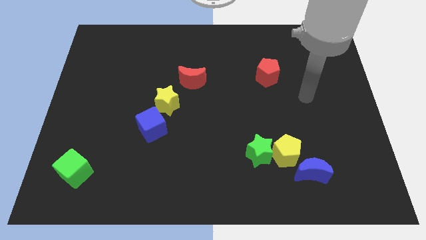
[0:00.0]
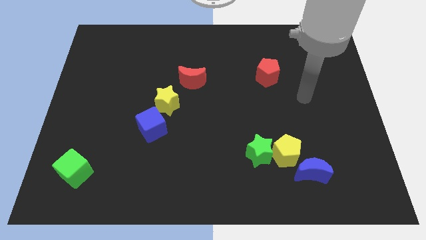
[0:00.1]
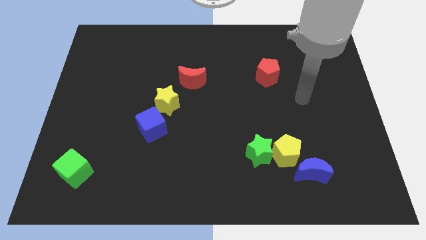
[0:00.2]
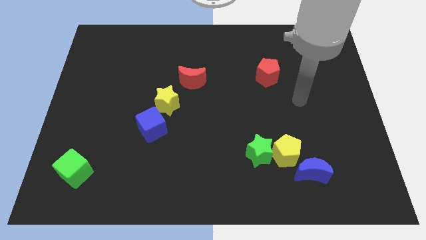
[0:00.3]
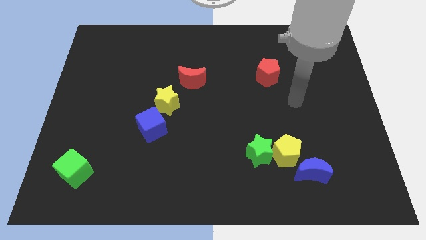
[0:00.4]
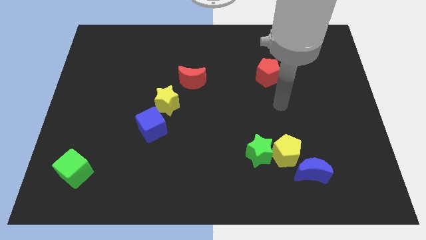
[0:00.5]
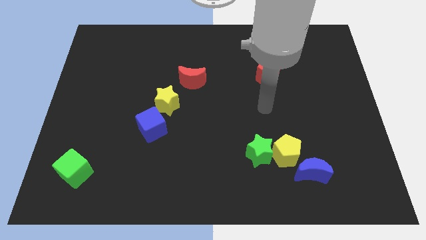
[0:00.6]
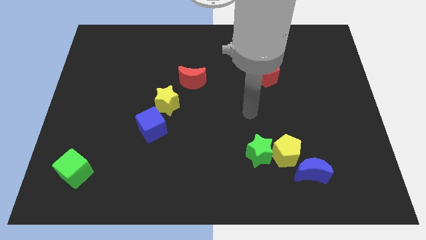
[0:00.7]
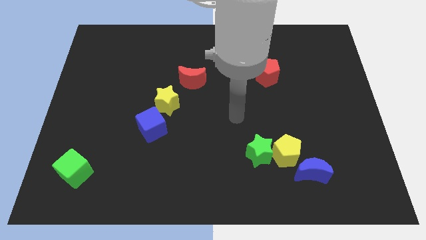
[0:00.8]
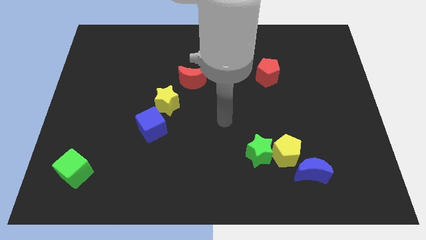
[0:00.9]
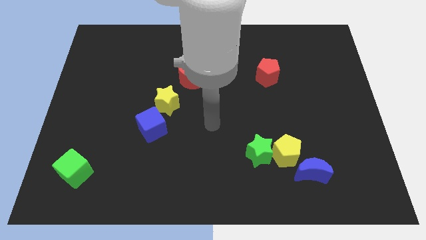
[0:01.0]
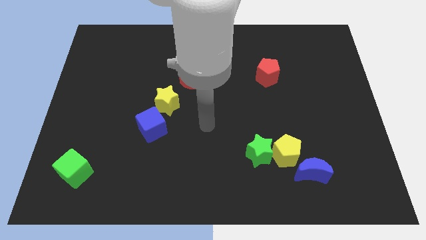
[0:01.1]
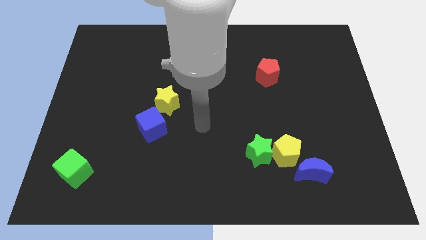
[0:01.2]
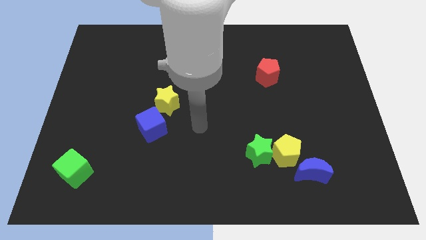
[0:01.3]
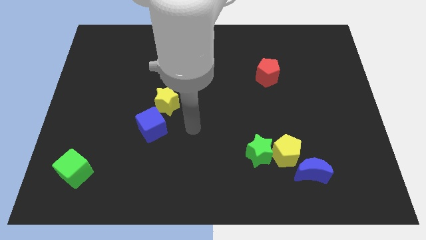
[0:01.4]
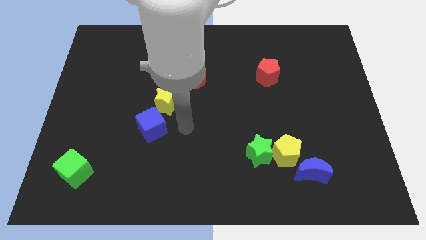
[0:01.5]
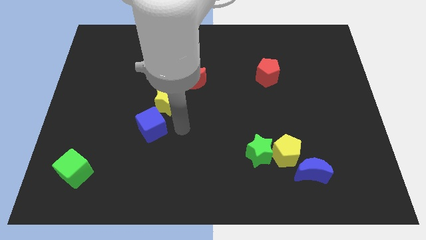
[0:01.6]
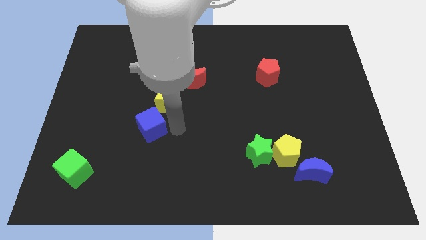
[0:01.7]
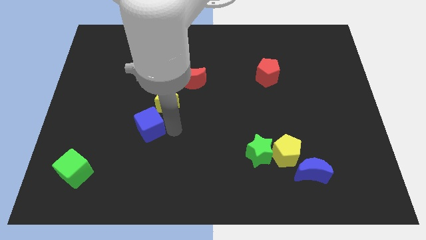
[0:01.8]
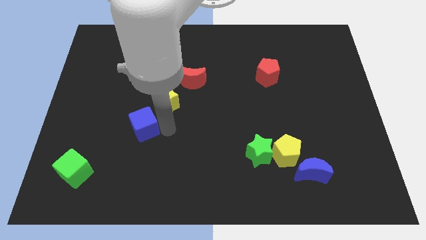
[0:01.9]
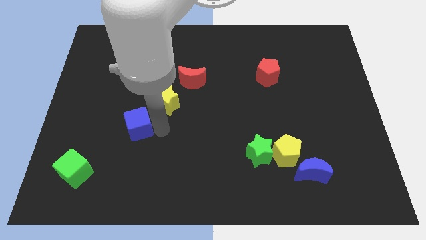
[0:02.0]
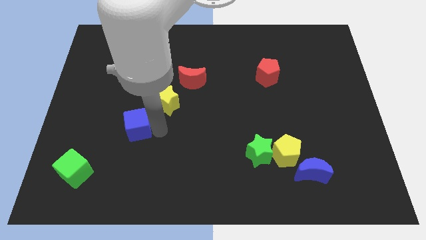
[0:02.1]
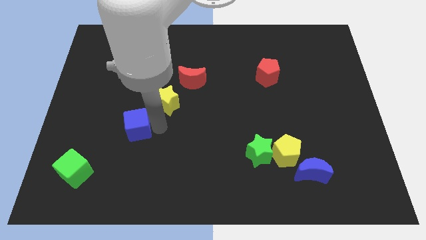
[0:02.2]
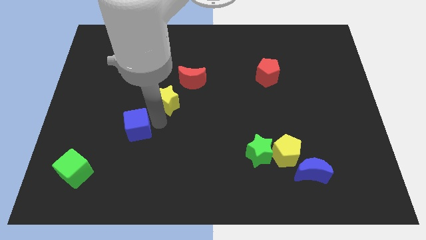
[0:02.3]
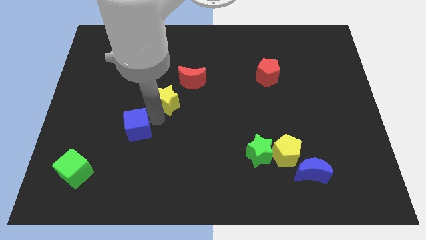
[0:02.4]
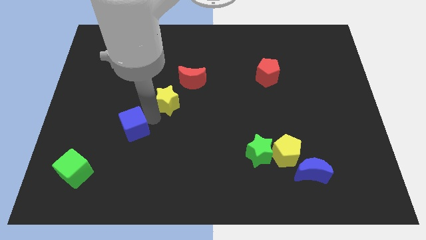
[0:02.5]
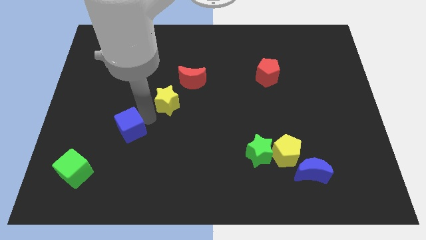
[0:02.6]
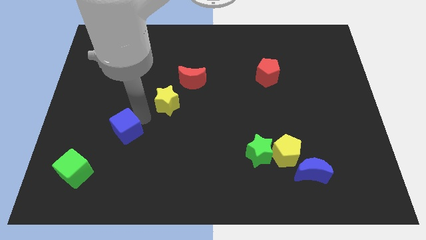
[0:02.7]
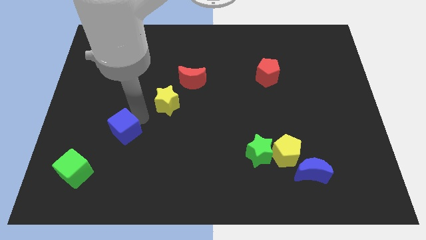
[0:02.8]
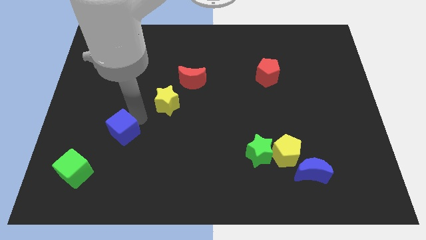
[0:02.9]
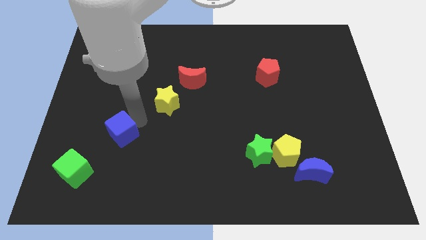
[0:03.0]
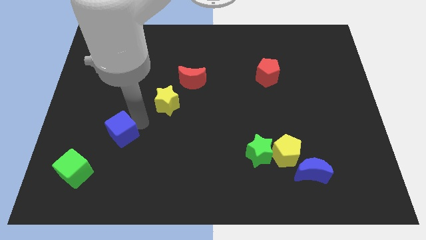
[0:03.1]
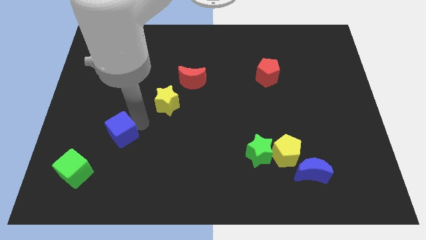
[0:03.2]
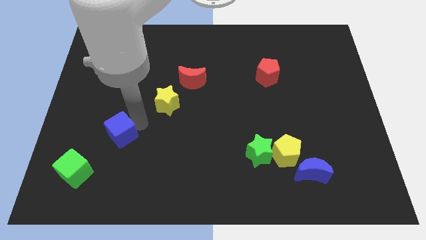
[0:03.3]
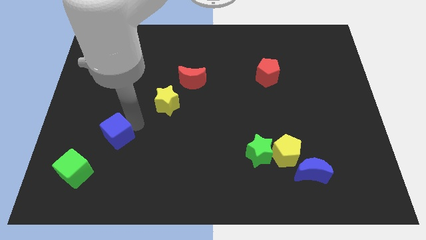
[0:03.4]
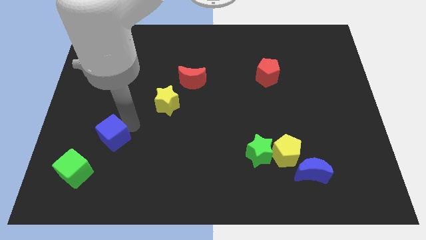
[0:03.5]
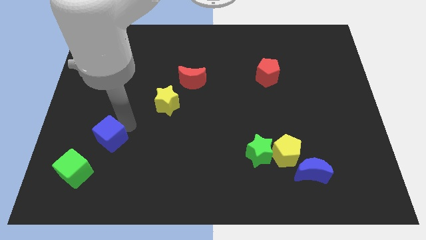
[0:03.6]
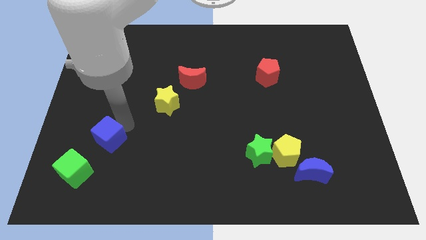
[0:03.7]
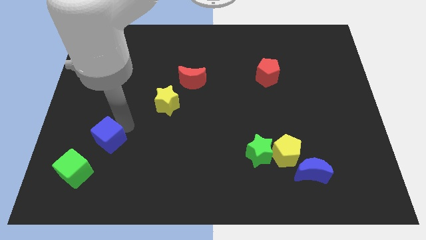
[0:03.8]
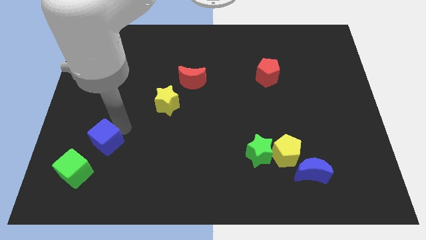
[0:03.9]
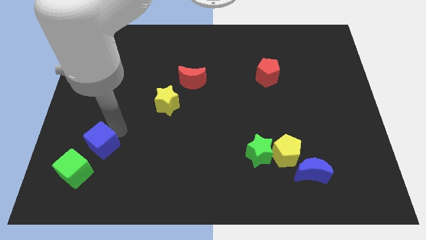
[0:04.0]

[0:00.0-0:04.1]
push the blue cube to the top right of the green cube

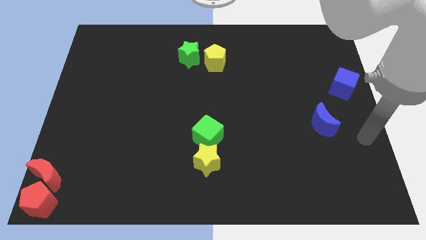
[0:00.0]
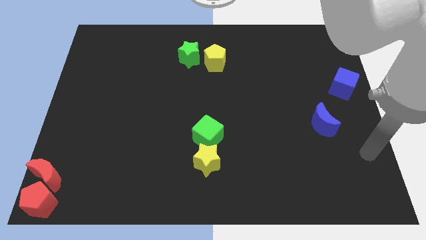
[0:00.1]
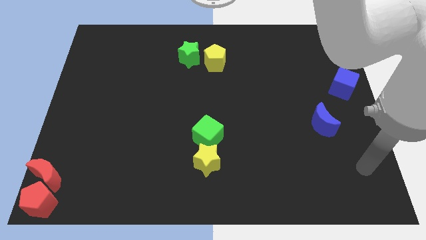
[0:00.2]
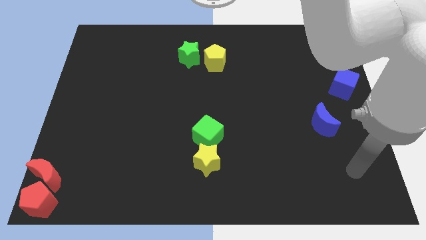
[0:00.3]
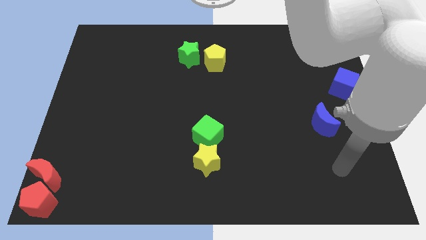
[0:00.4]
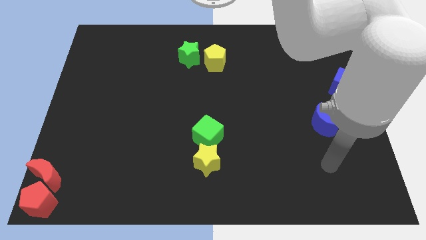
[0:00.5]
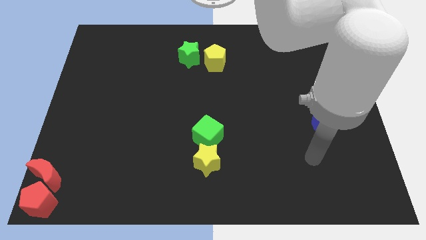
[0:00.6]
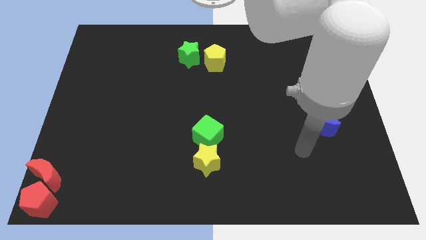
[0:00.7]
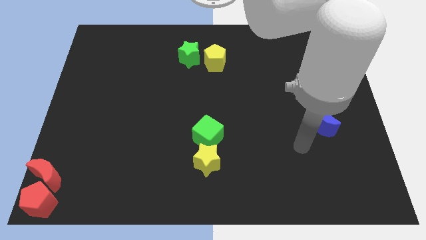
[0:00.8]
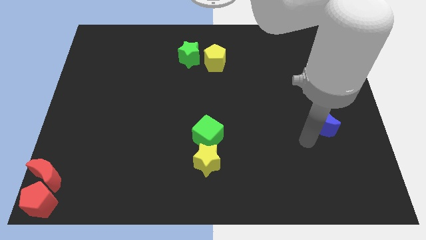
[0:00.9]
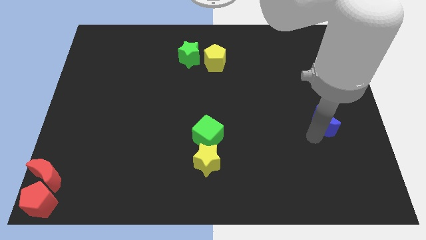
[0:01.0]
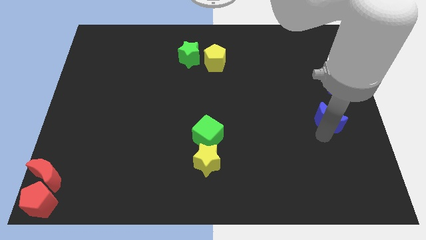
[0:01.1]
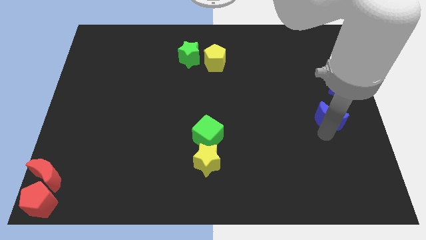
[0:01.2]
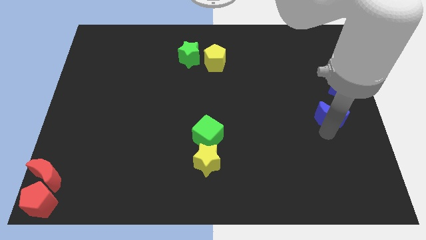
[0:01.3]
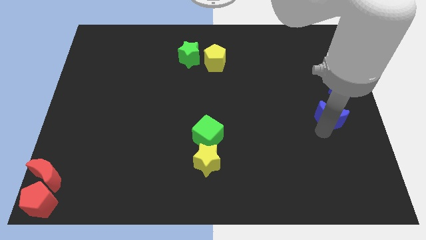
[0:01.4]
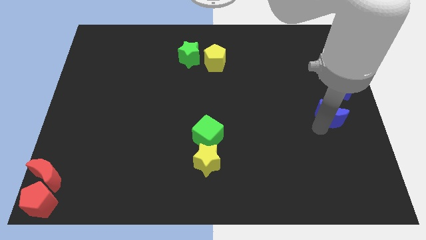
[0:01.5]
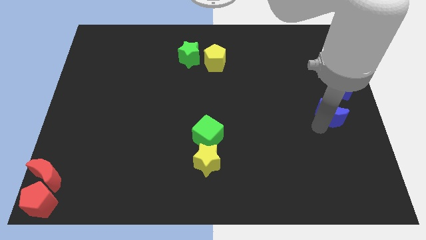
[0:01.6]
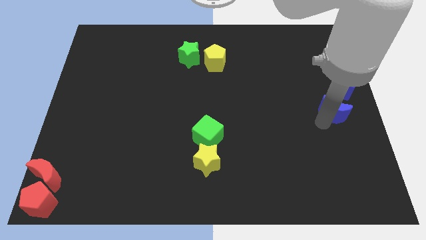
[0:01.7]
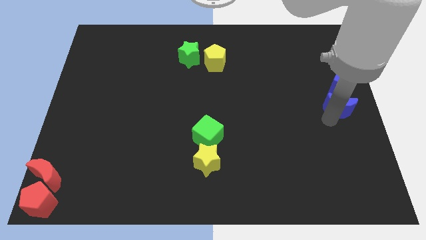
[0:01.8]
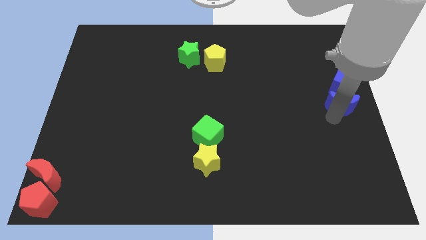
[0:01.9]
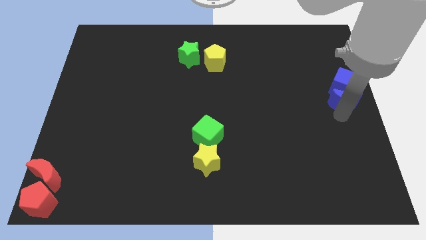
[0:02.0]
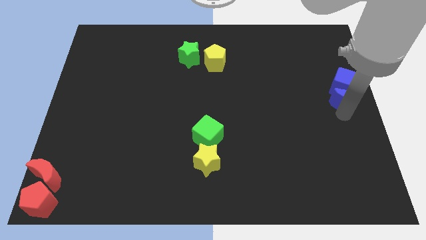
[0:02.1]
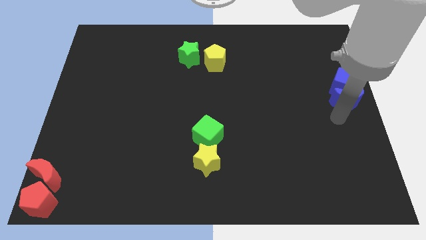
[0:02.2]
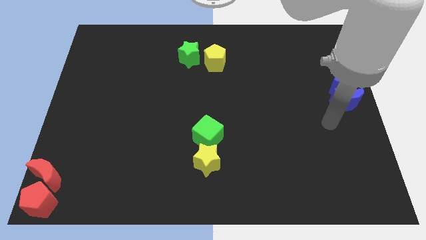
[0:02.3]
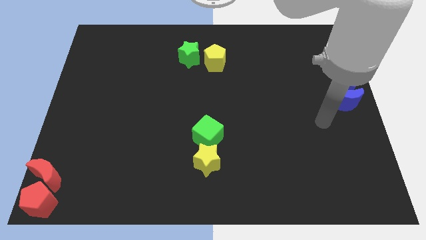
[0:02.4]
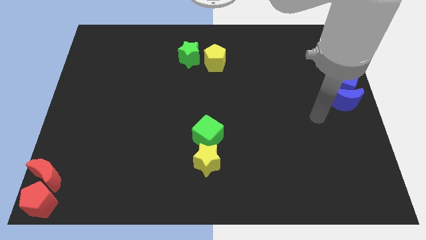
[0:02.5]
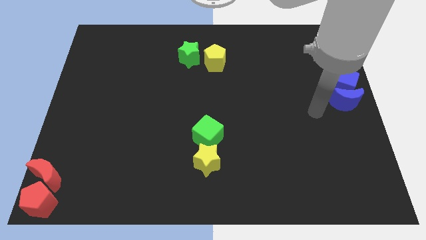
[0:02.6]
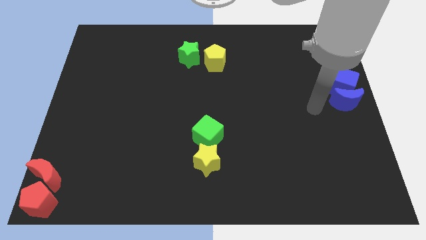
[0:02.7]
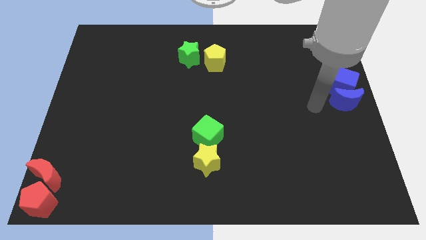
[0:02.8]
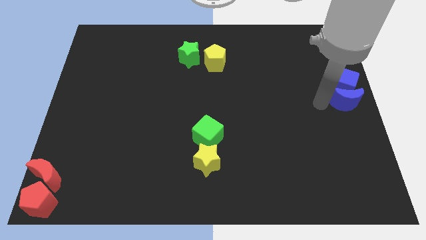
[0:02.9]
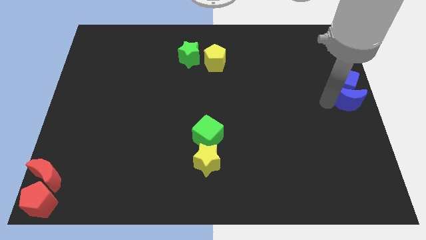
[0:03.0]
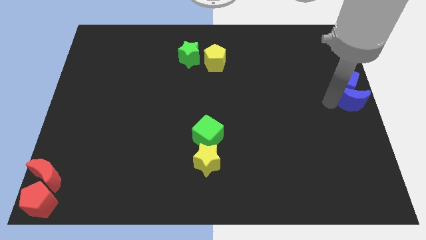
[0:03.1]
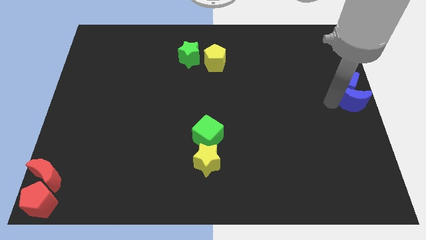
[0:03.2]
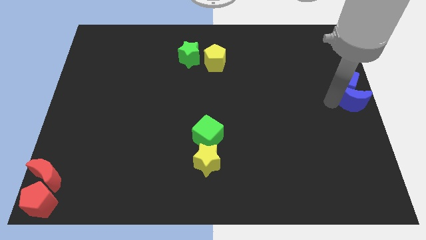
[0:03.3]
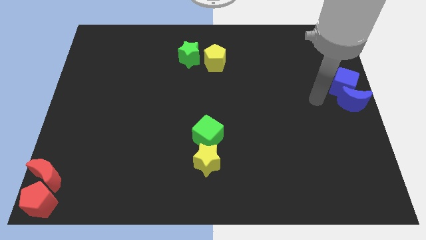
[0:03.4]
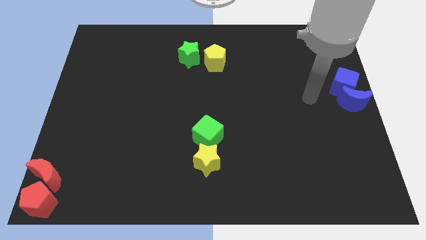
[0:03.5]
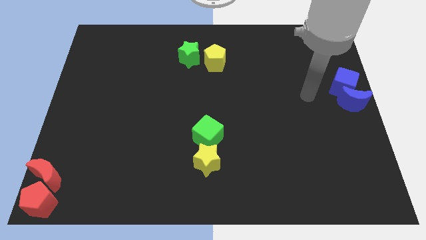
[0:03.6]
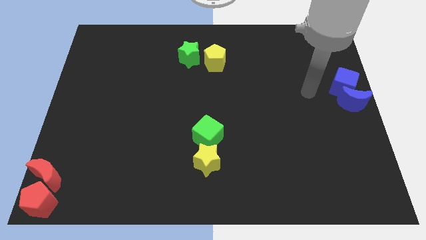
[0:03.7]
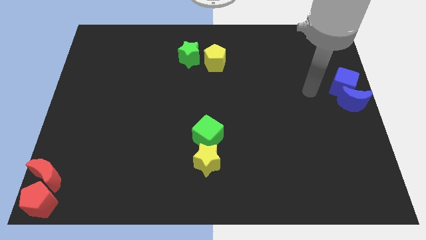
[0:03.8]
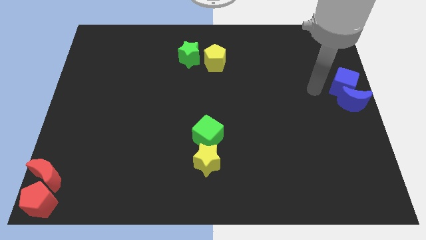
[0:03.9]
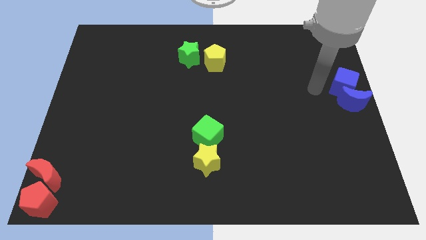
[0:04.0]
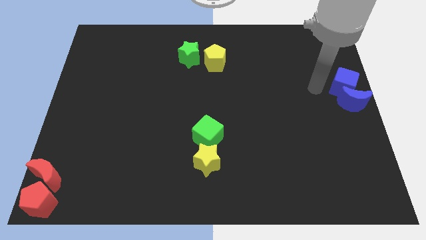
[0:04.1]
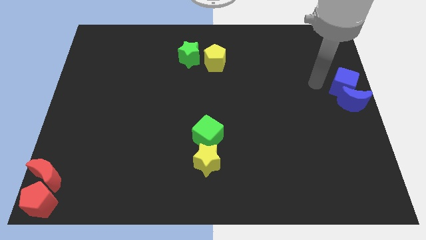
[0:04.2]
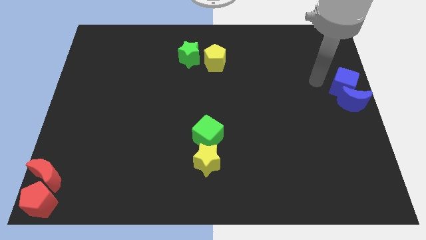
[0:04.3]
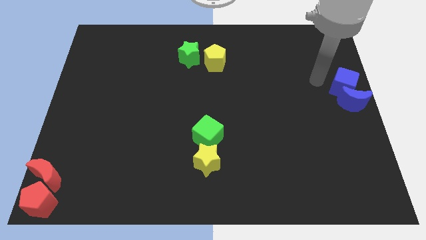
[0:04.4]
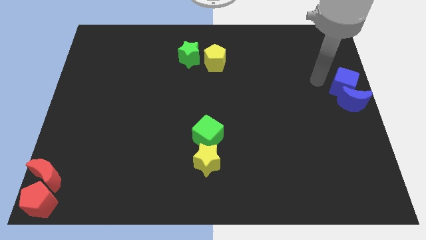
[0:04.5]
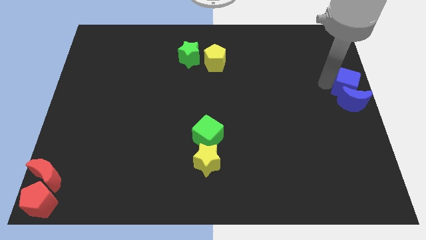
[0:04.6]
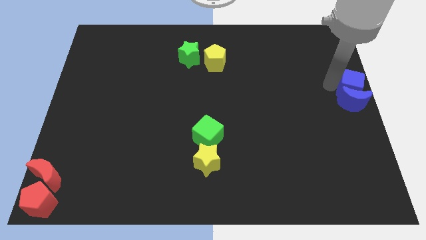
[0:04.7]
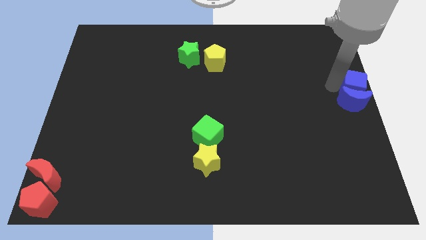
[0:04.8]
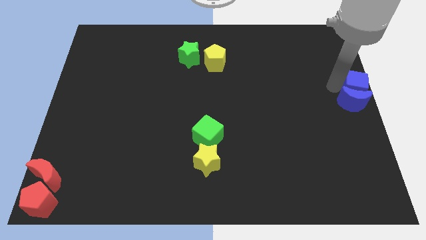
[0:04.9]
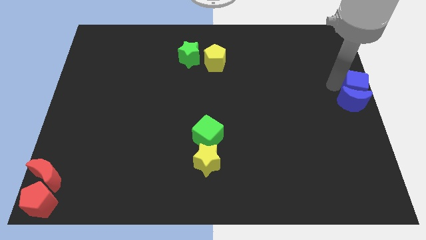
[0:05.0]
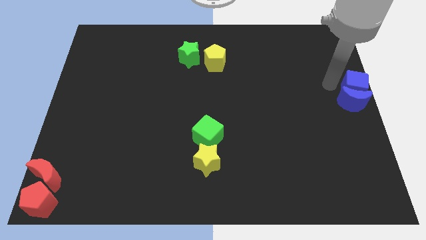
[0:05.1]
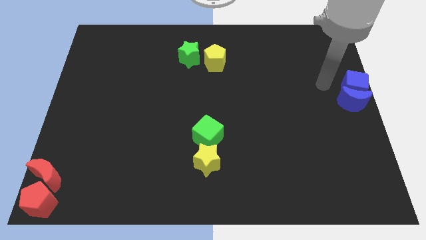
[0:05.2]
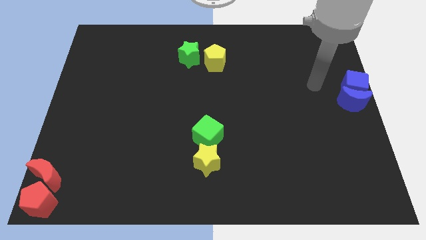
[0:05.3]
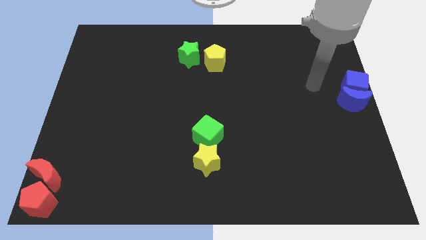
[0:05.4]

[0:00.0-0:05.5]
adjust the blue blocks at the right center of the board
